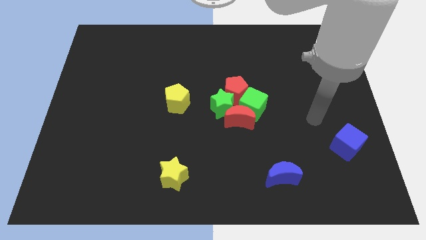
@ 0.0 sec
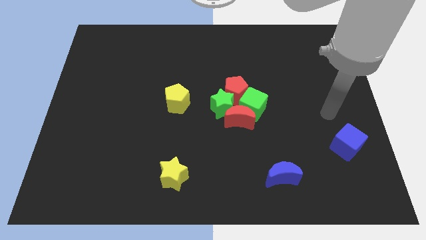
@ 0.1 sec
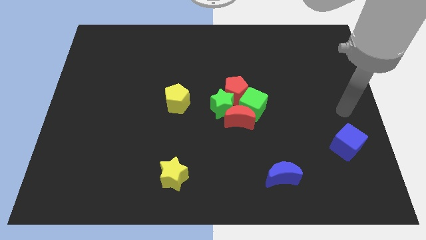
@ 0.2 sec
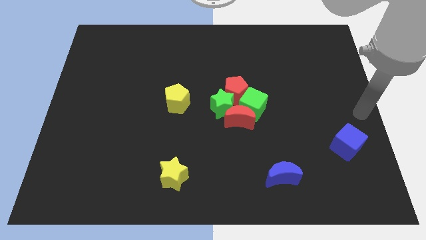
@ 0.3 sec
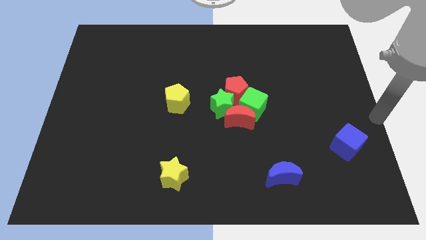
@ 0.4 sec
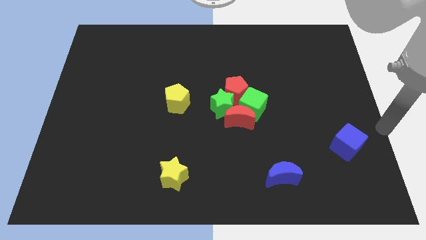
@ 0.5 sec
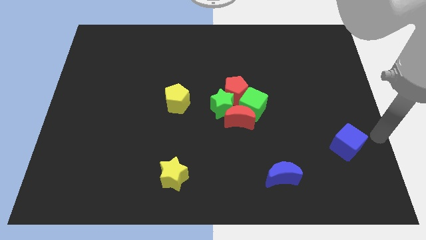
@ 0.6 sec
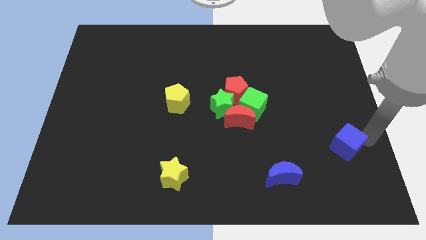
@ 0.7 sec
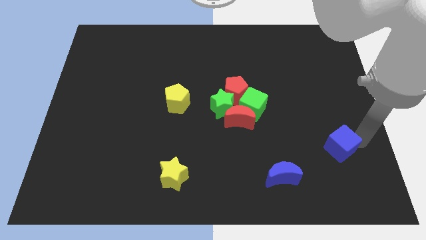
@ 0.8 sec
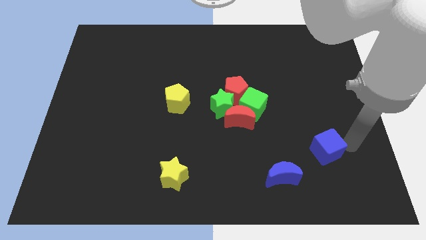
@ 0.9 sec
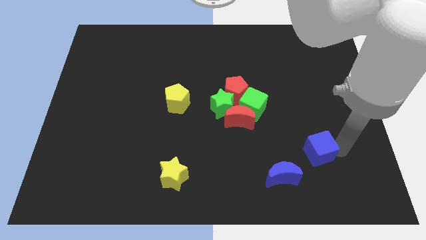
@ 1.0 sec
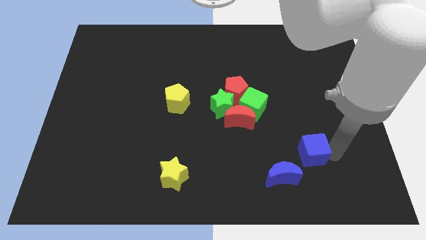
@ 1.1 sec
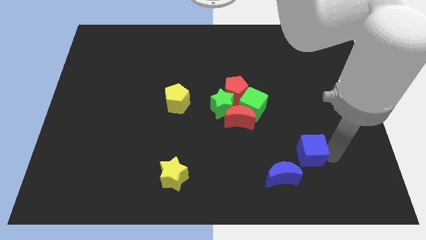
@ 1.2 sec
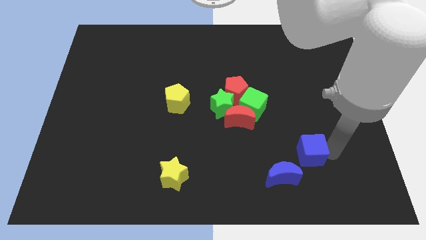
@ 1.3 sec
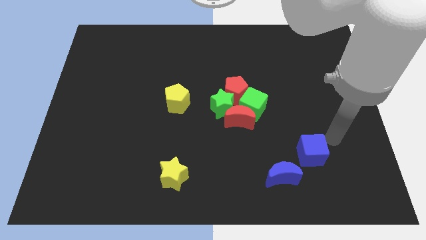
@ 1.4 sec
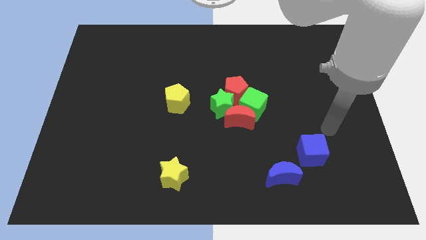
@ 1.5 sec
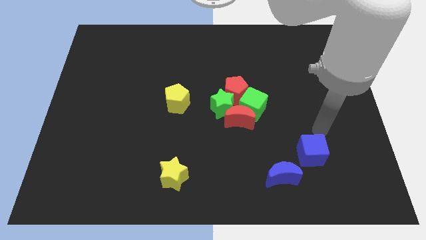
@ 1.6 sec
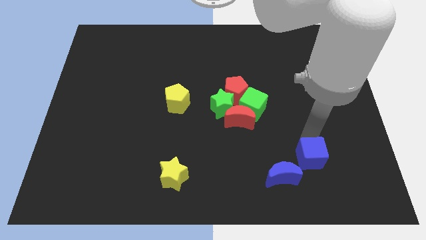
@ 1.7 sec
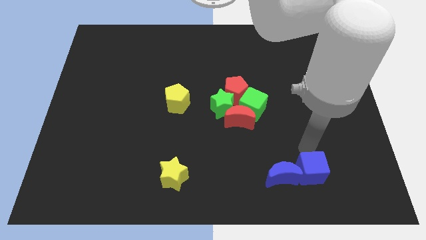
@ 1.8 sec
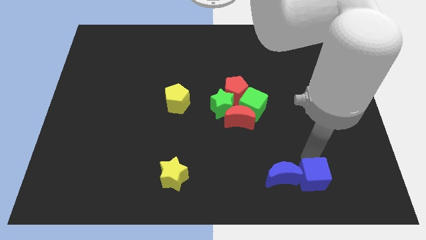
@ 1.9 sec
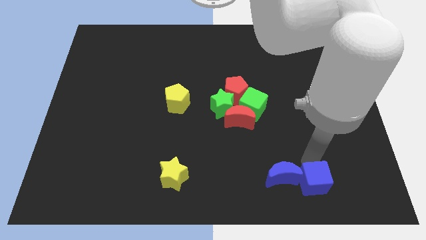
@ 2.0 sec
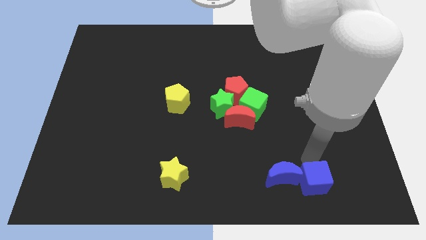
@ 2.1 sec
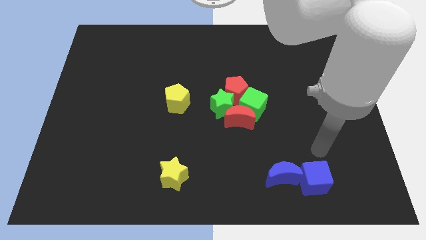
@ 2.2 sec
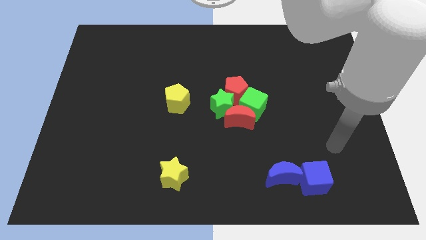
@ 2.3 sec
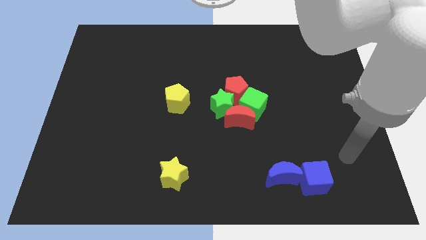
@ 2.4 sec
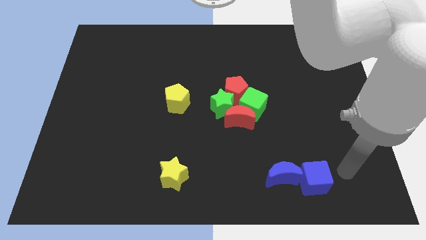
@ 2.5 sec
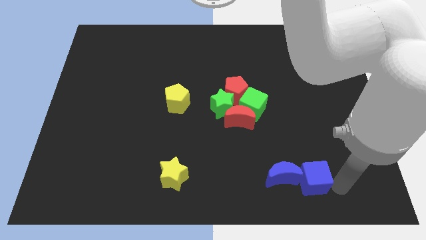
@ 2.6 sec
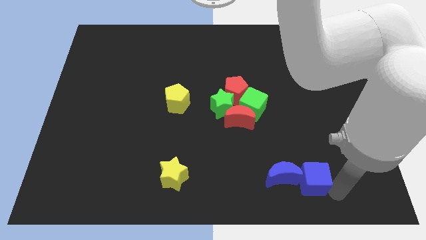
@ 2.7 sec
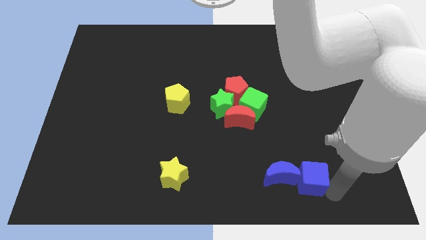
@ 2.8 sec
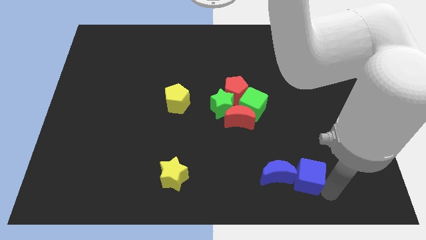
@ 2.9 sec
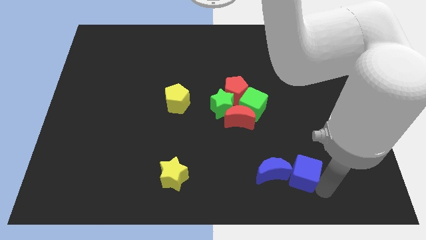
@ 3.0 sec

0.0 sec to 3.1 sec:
push the blue cube into the blue crescent

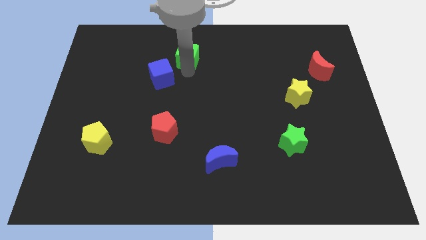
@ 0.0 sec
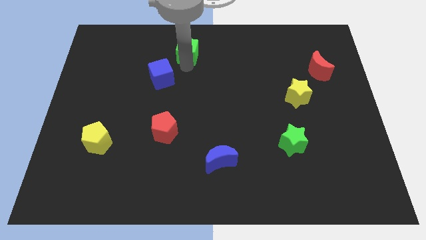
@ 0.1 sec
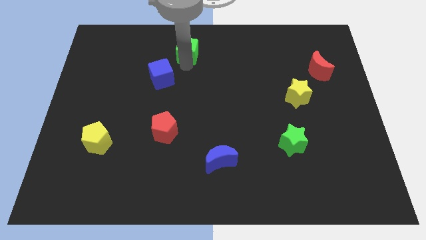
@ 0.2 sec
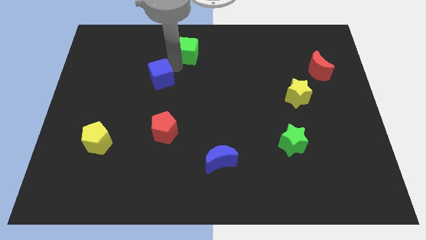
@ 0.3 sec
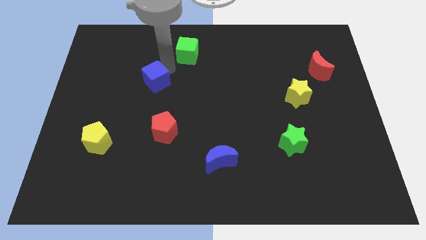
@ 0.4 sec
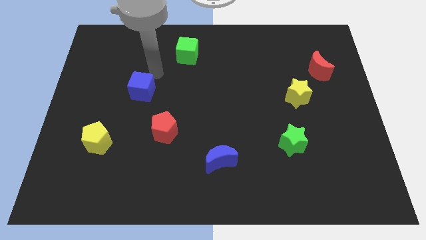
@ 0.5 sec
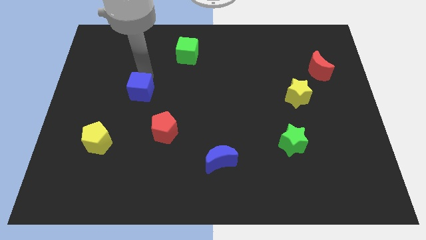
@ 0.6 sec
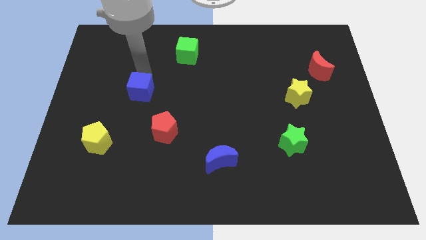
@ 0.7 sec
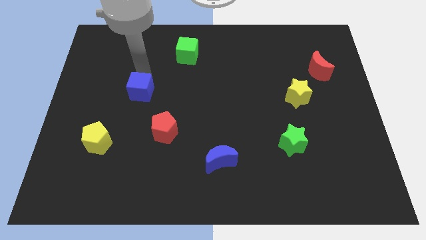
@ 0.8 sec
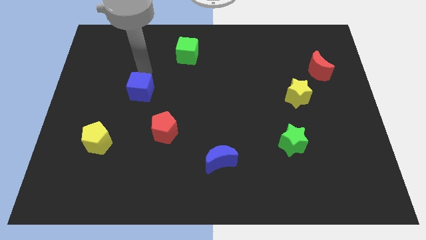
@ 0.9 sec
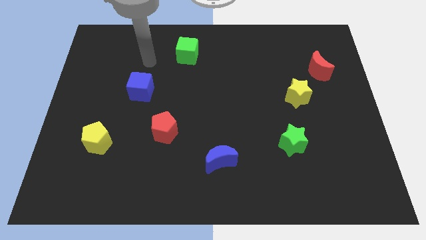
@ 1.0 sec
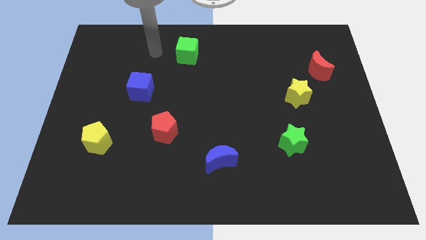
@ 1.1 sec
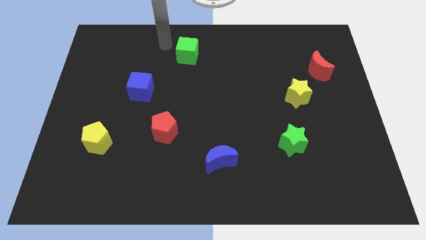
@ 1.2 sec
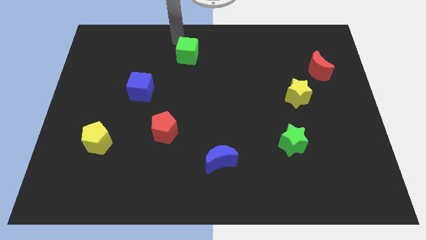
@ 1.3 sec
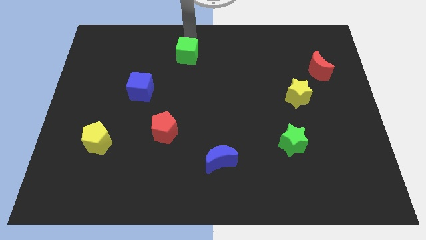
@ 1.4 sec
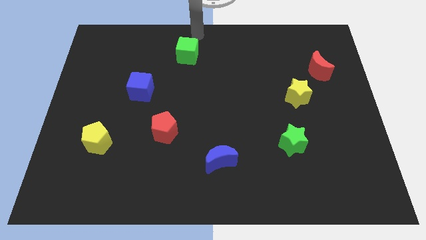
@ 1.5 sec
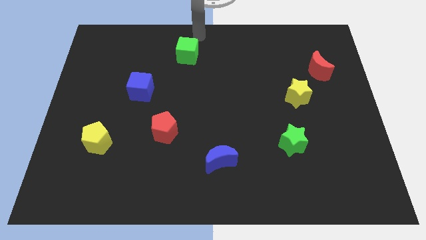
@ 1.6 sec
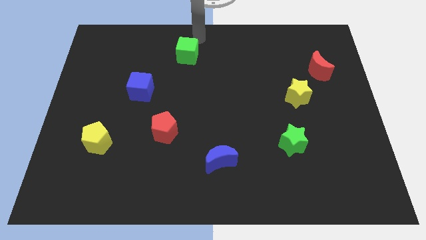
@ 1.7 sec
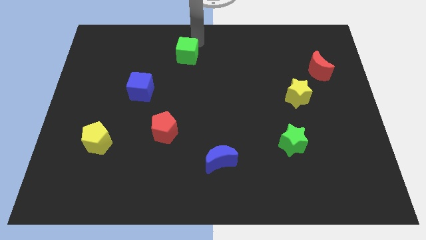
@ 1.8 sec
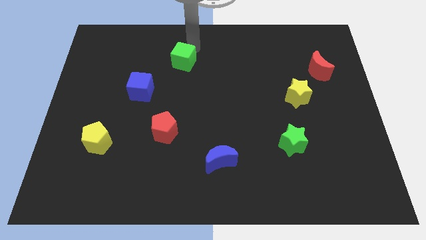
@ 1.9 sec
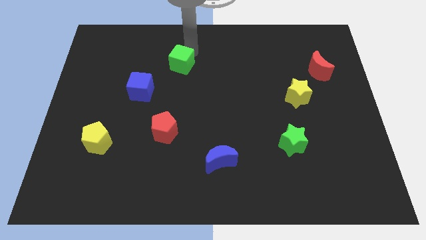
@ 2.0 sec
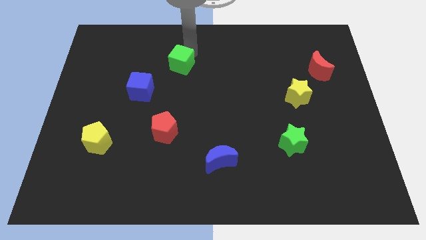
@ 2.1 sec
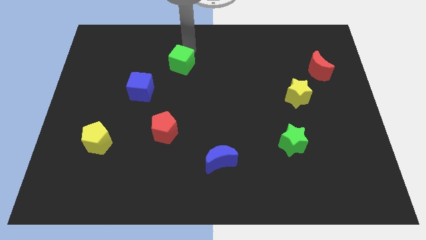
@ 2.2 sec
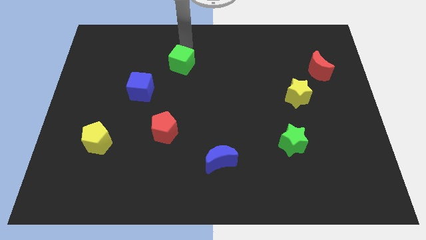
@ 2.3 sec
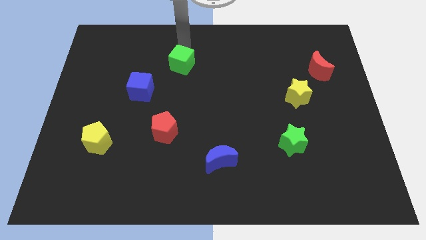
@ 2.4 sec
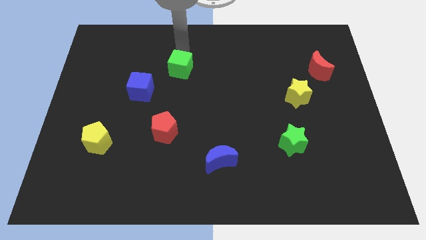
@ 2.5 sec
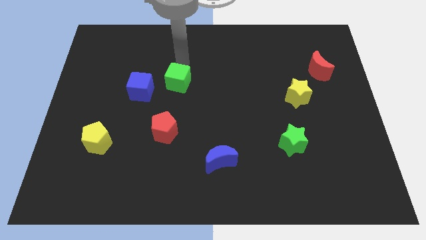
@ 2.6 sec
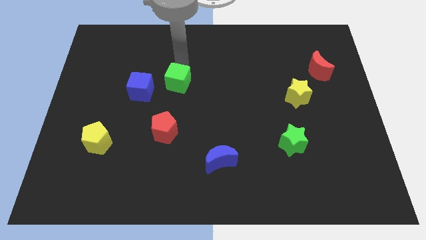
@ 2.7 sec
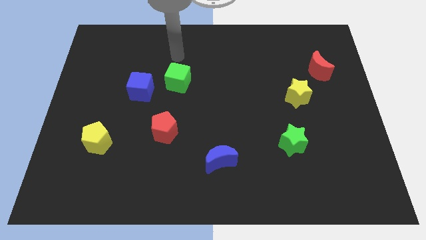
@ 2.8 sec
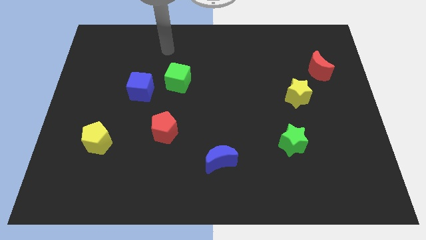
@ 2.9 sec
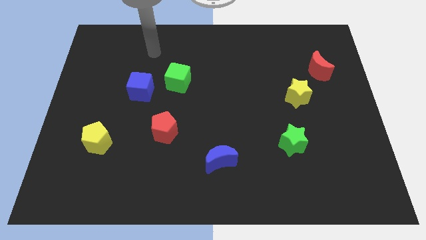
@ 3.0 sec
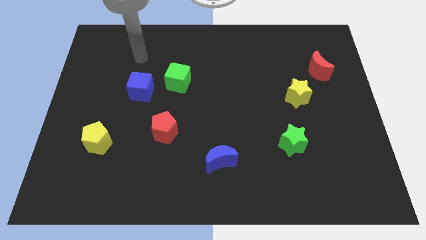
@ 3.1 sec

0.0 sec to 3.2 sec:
push blue and green cube slightly to the down

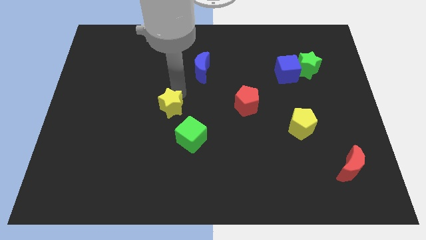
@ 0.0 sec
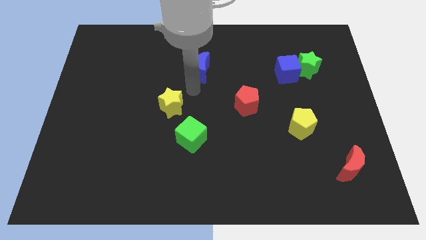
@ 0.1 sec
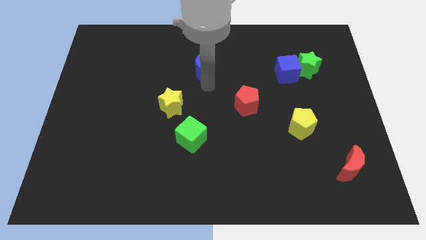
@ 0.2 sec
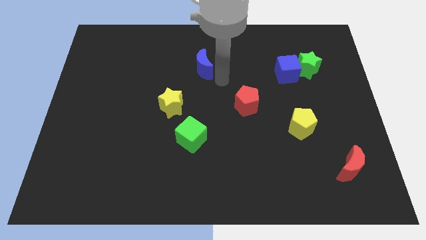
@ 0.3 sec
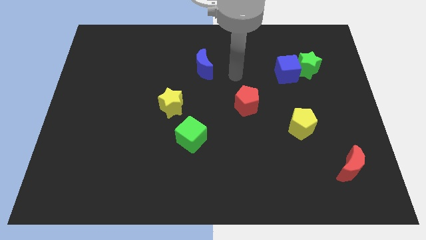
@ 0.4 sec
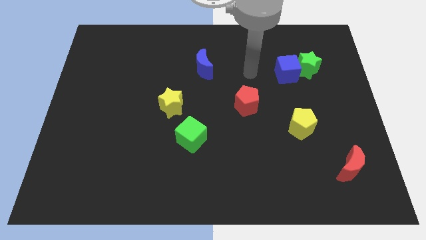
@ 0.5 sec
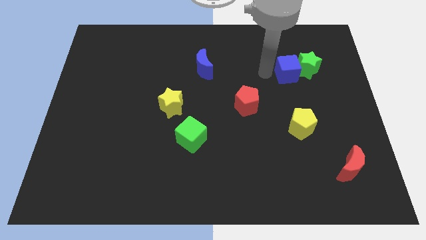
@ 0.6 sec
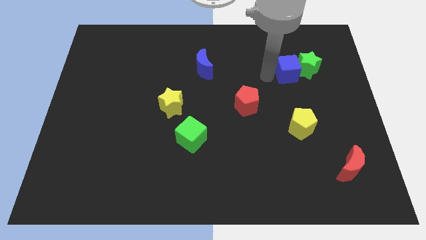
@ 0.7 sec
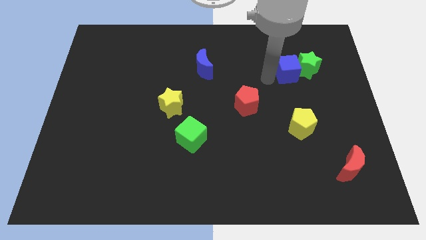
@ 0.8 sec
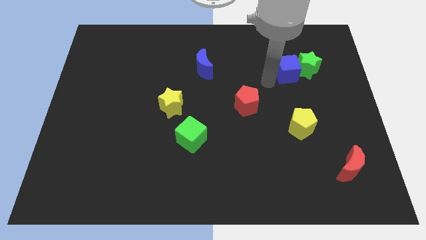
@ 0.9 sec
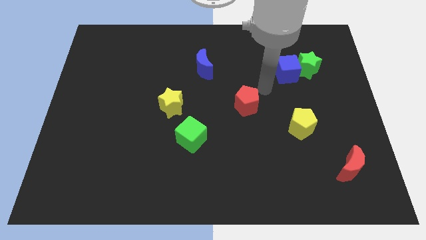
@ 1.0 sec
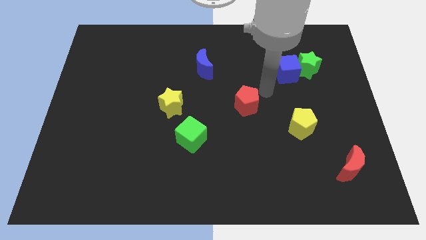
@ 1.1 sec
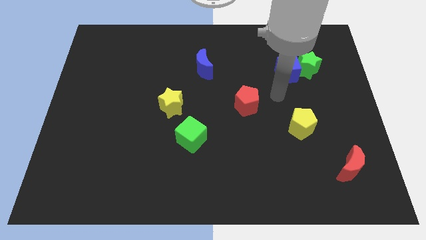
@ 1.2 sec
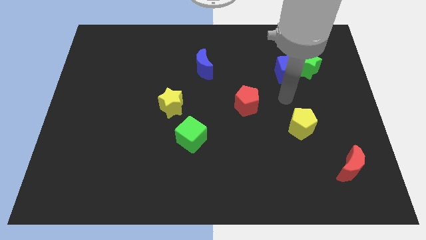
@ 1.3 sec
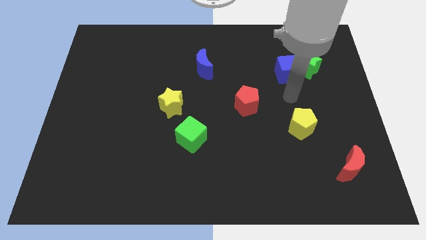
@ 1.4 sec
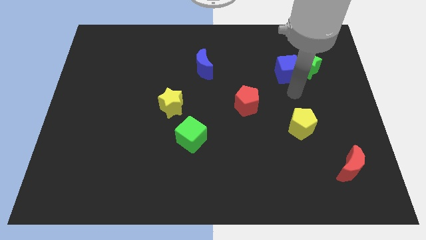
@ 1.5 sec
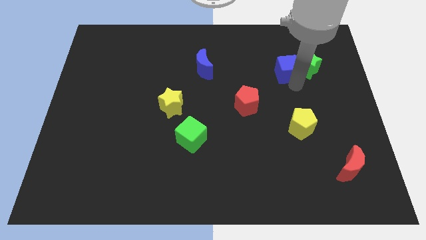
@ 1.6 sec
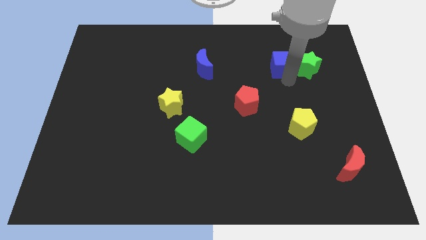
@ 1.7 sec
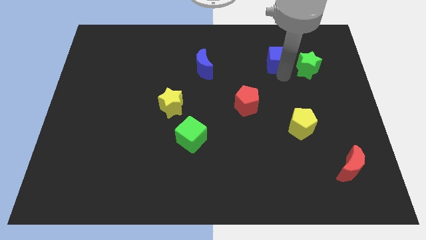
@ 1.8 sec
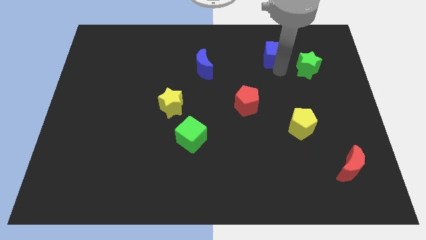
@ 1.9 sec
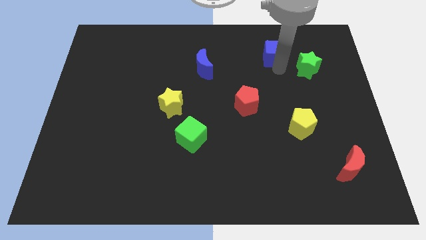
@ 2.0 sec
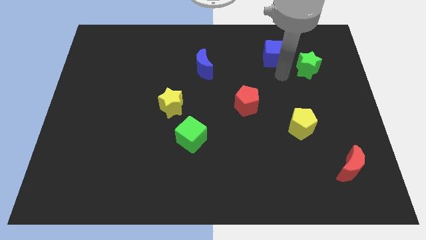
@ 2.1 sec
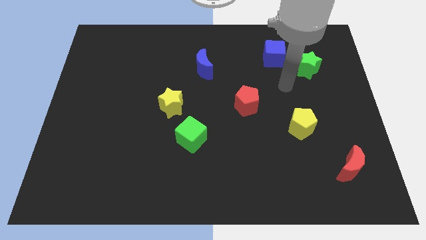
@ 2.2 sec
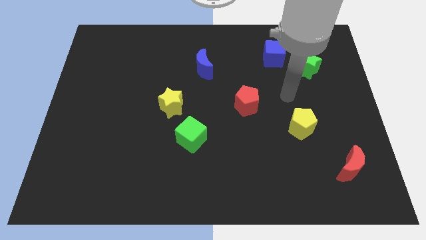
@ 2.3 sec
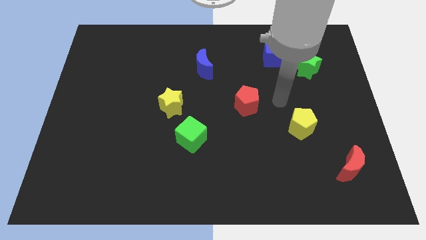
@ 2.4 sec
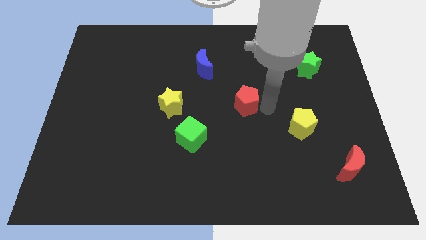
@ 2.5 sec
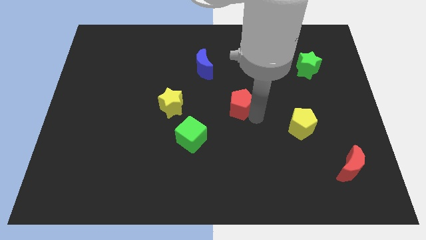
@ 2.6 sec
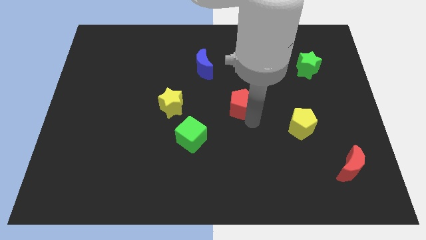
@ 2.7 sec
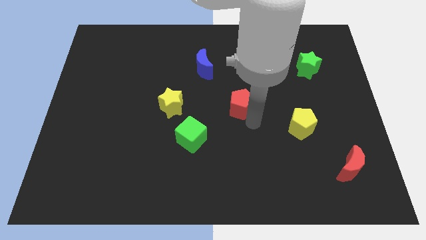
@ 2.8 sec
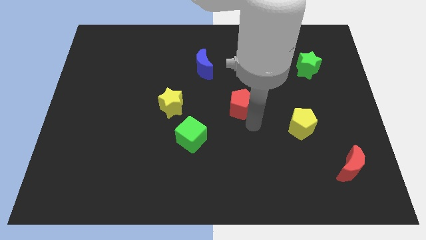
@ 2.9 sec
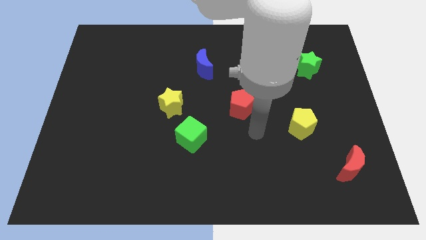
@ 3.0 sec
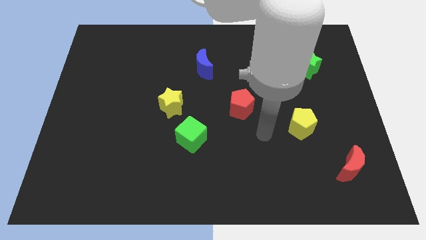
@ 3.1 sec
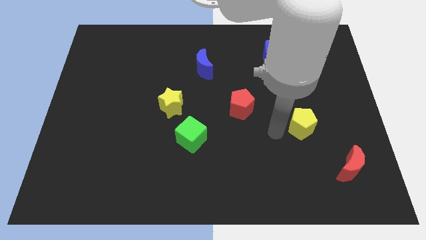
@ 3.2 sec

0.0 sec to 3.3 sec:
move blue cube towards the top of the board
